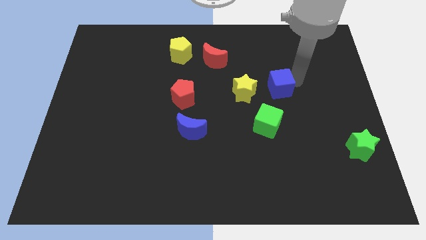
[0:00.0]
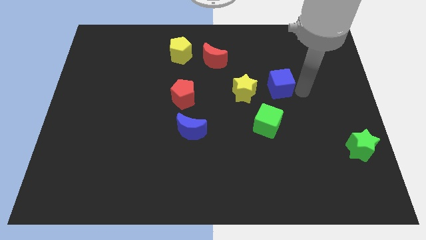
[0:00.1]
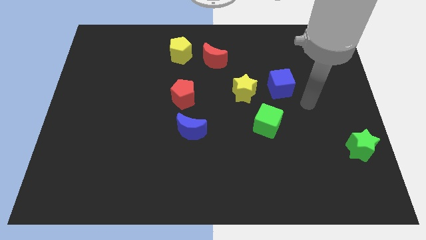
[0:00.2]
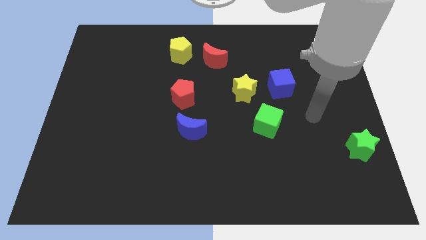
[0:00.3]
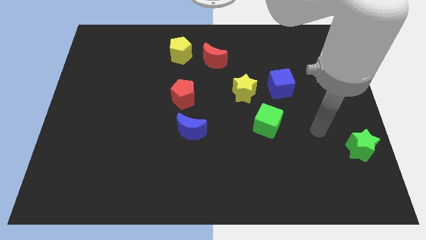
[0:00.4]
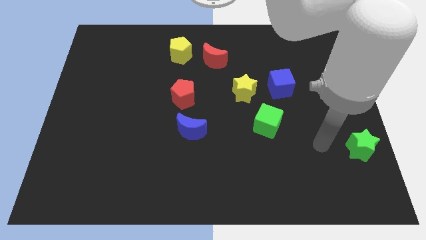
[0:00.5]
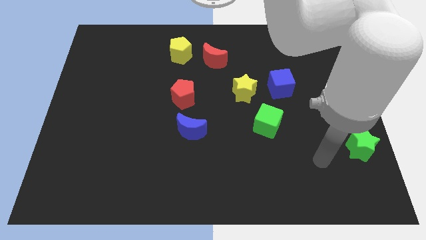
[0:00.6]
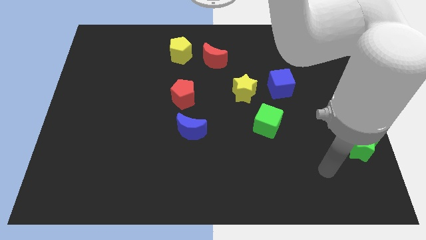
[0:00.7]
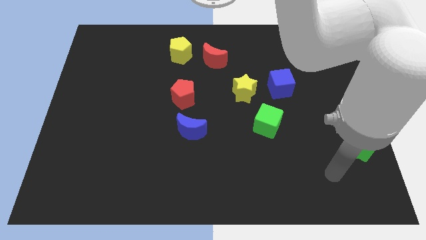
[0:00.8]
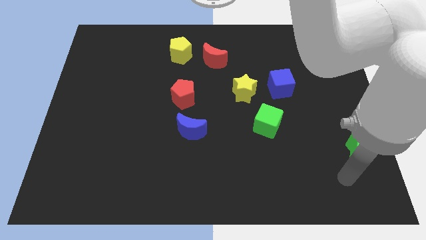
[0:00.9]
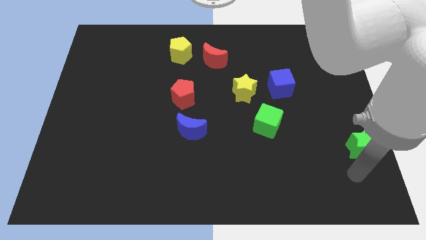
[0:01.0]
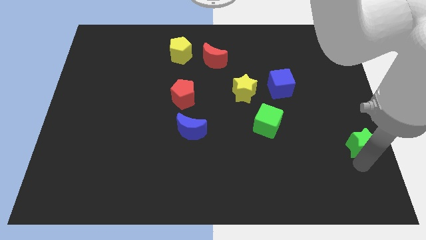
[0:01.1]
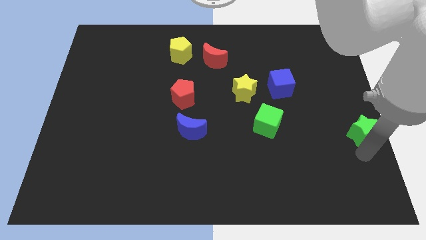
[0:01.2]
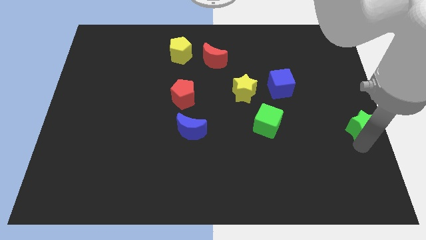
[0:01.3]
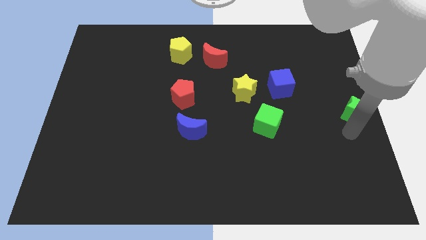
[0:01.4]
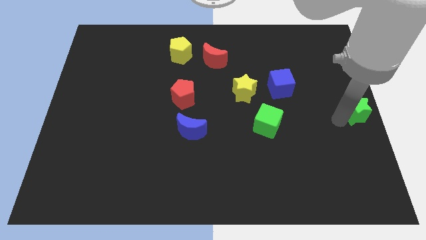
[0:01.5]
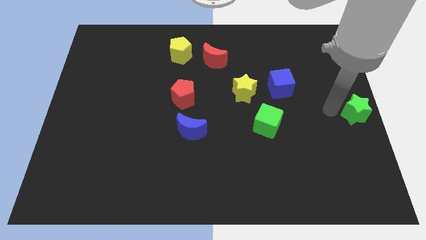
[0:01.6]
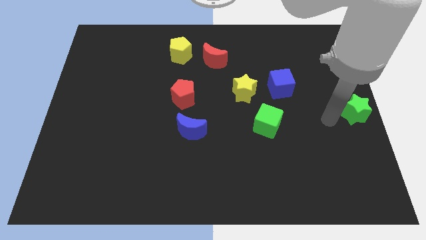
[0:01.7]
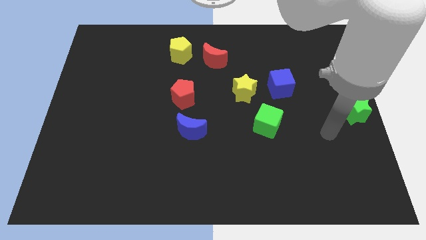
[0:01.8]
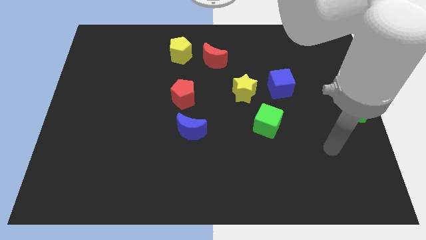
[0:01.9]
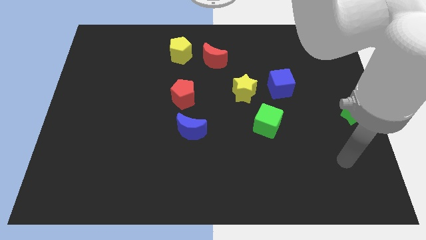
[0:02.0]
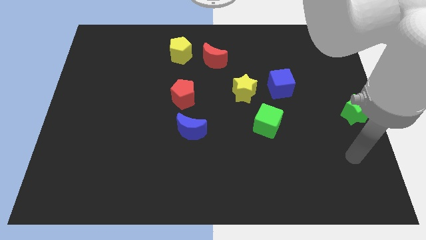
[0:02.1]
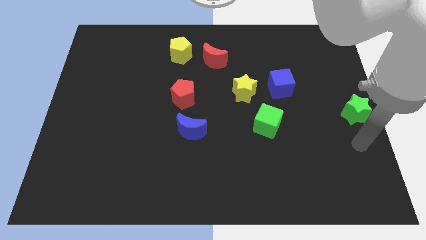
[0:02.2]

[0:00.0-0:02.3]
move the green star to the center right

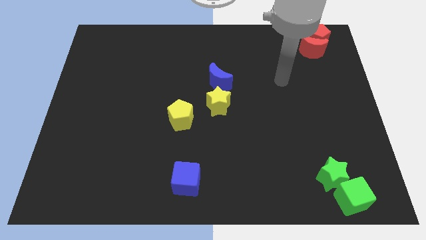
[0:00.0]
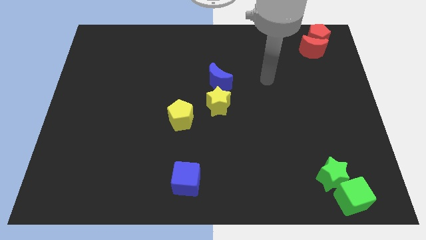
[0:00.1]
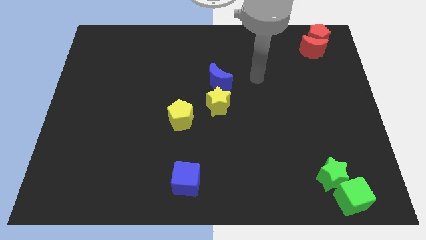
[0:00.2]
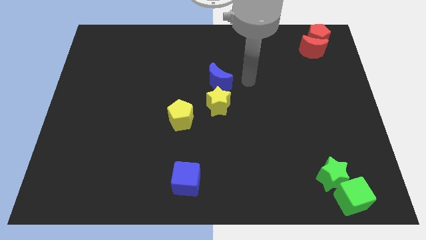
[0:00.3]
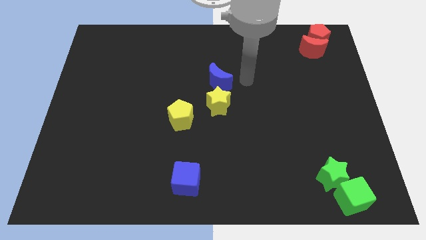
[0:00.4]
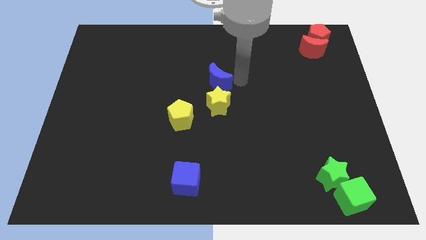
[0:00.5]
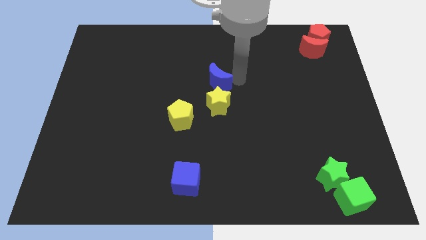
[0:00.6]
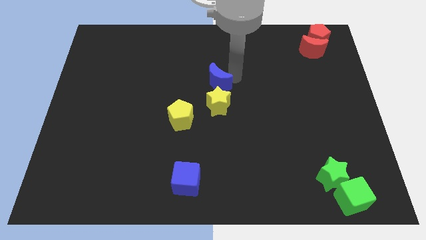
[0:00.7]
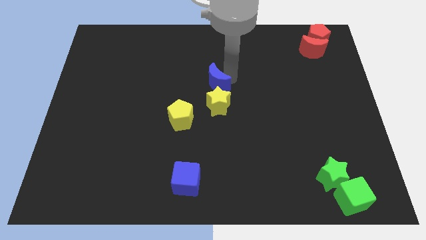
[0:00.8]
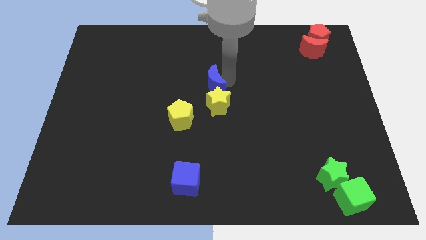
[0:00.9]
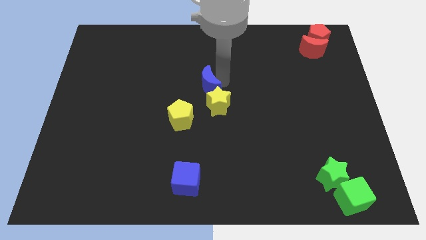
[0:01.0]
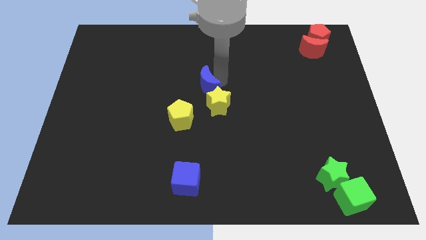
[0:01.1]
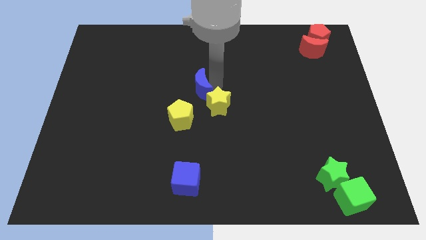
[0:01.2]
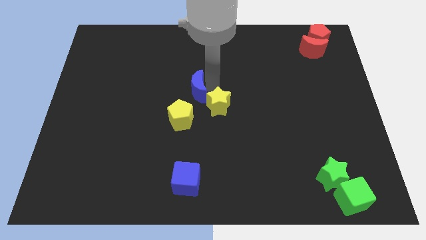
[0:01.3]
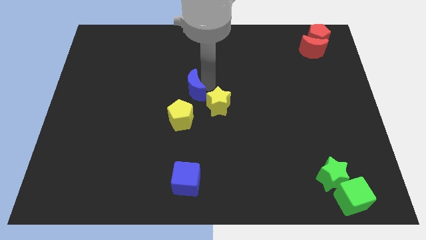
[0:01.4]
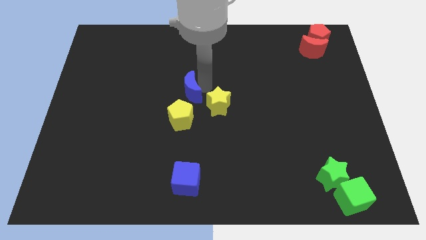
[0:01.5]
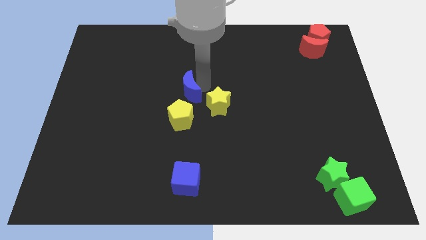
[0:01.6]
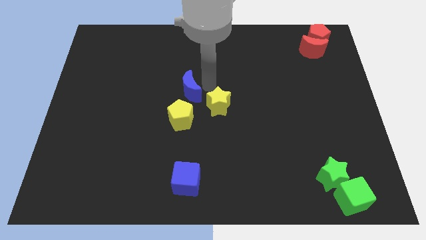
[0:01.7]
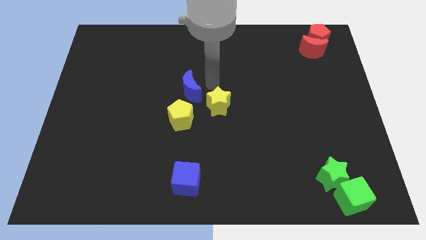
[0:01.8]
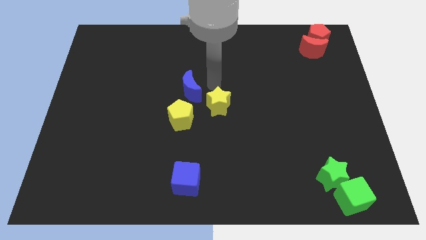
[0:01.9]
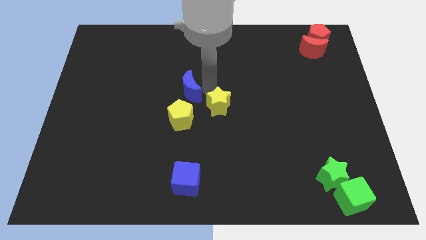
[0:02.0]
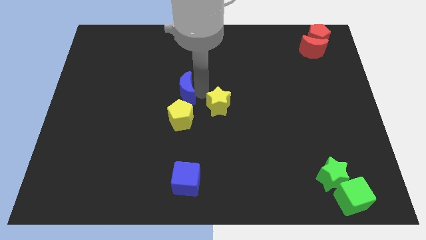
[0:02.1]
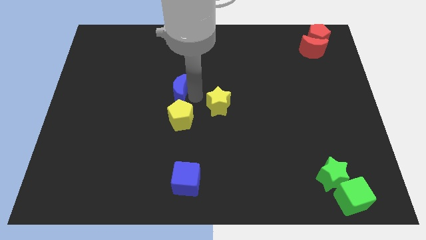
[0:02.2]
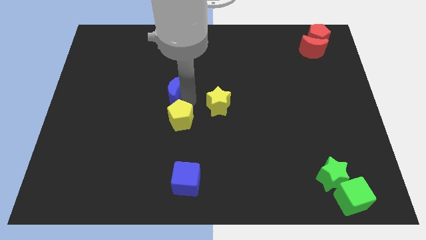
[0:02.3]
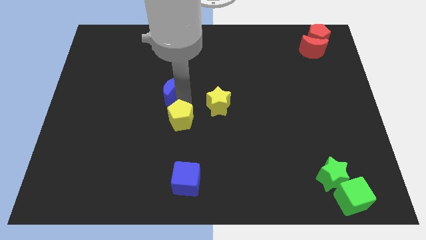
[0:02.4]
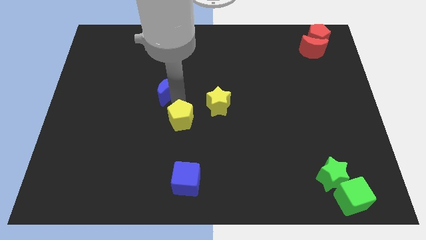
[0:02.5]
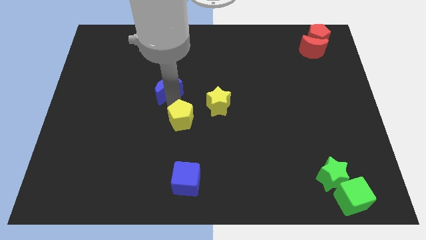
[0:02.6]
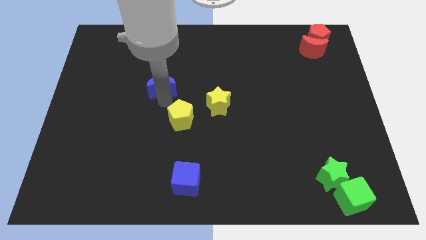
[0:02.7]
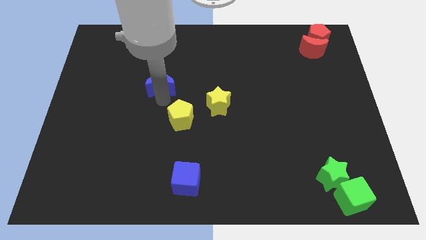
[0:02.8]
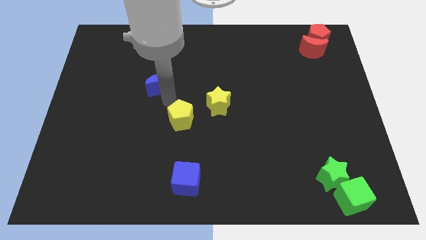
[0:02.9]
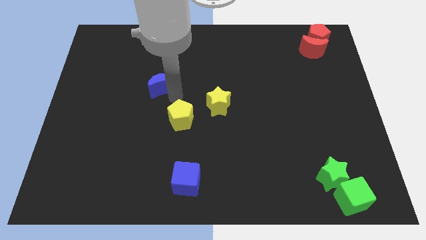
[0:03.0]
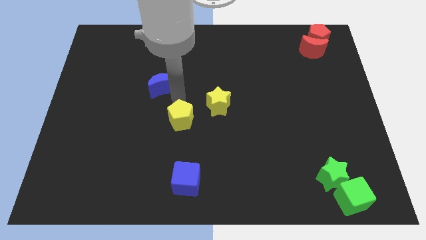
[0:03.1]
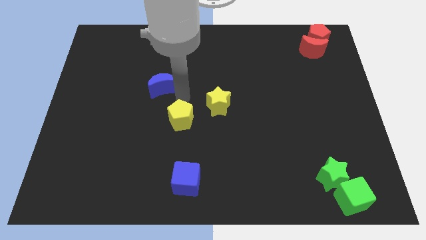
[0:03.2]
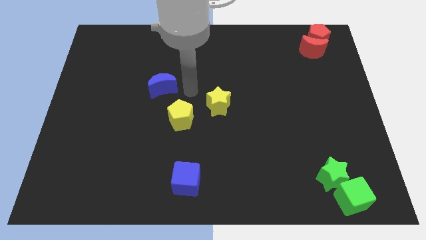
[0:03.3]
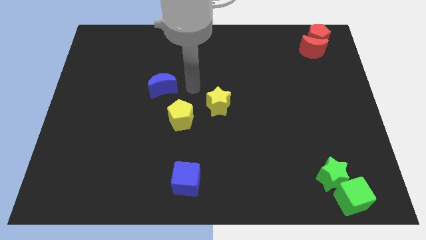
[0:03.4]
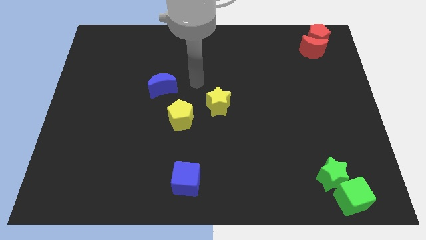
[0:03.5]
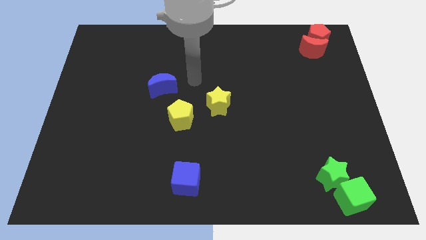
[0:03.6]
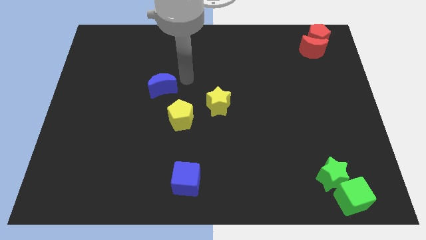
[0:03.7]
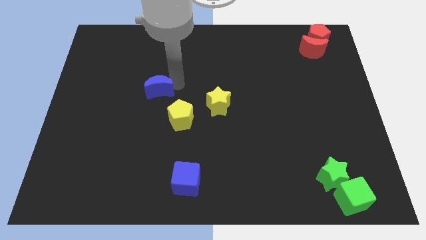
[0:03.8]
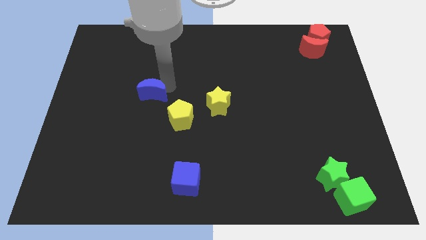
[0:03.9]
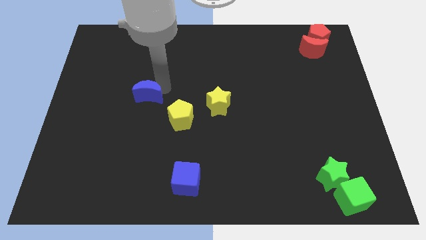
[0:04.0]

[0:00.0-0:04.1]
move the blue crescent to left side of the yellow pentagon

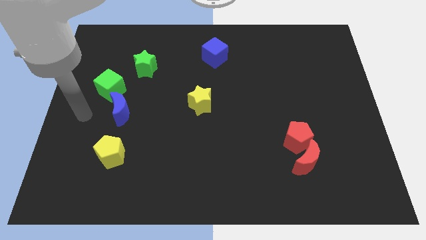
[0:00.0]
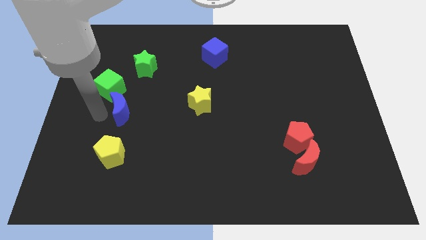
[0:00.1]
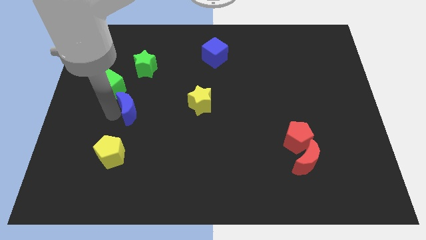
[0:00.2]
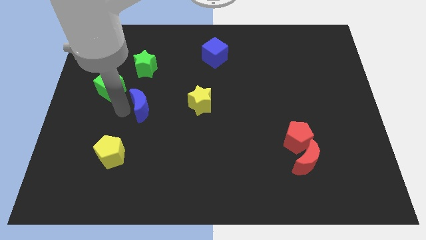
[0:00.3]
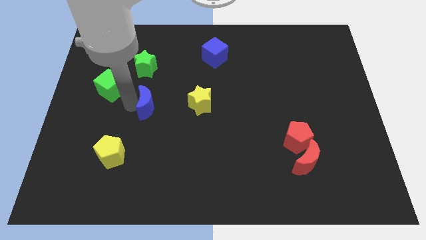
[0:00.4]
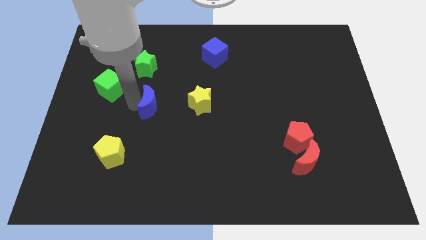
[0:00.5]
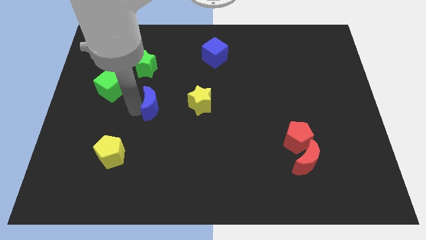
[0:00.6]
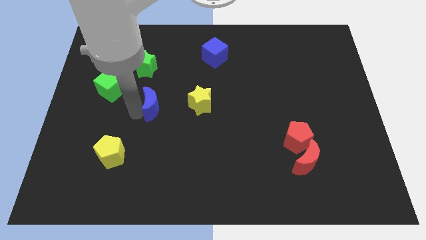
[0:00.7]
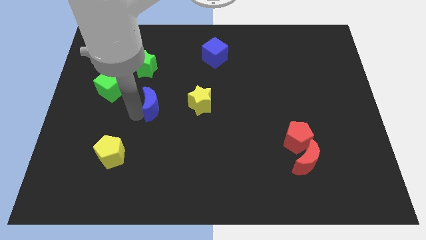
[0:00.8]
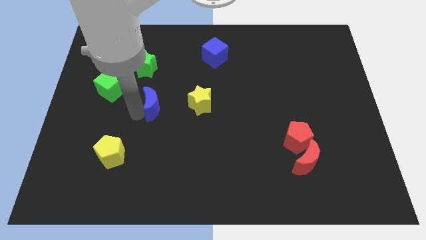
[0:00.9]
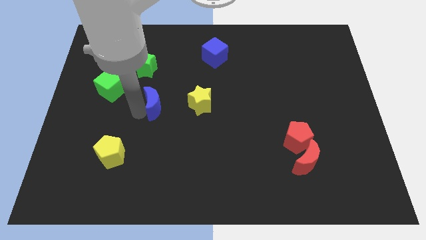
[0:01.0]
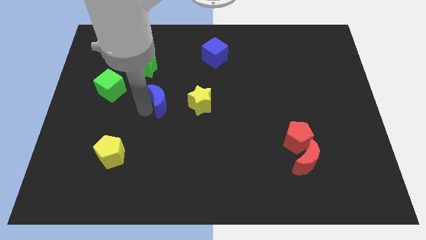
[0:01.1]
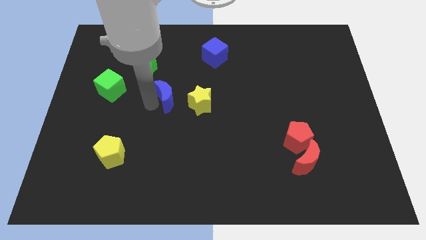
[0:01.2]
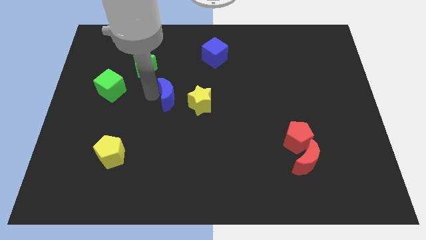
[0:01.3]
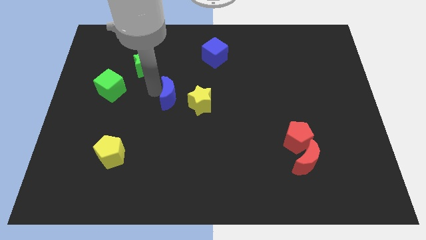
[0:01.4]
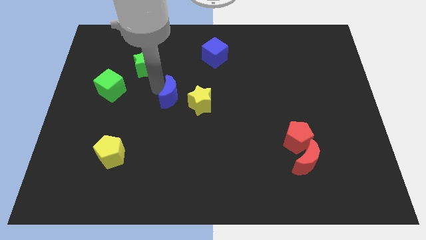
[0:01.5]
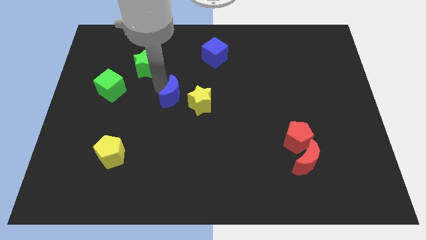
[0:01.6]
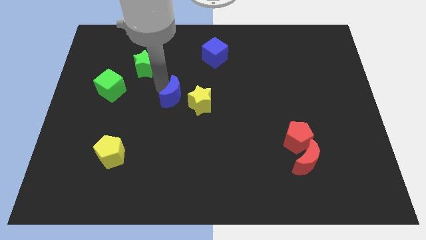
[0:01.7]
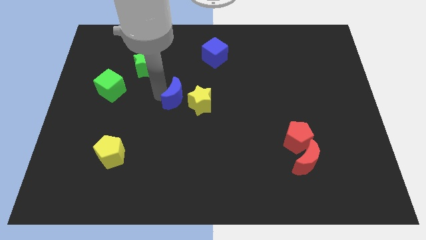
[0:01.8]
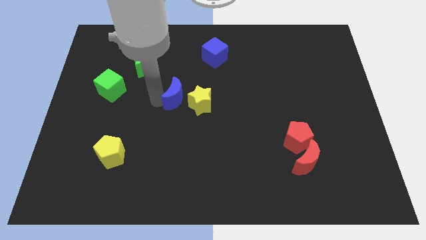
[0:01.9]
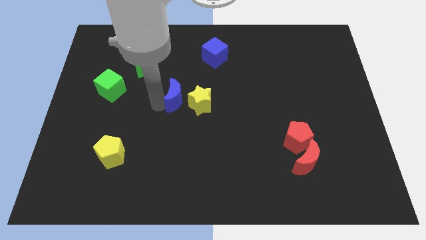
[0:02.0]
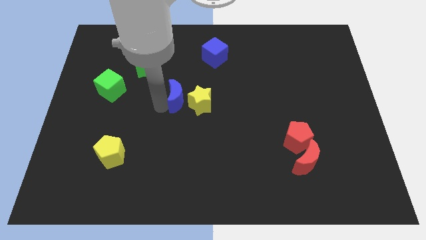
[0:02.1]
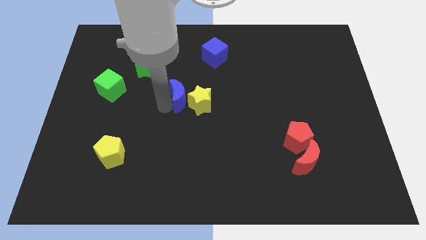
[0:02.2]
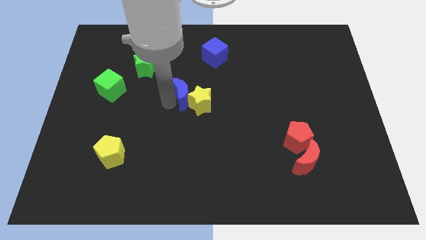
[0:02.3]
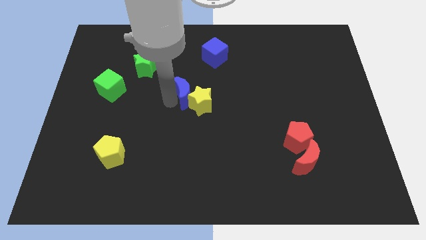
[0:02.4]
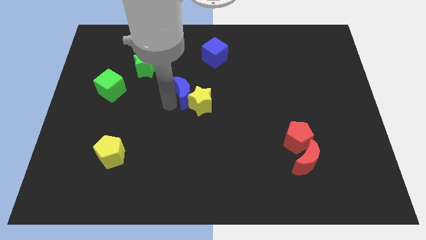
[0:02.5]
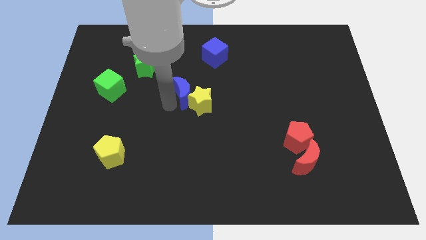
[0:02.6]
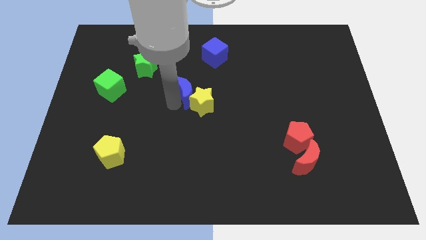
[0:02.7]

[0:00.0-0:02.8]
place the blue moon to the left side of the yellow star

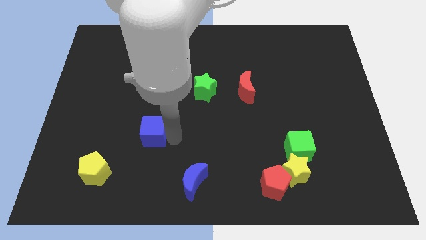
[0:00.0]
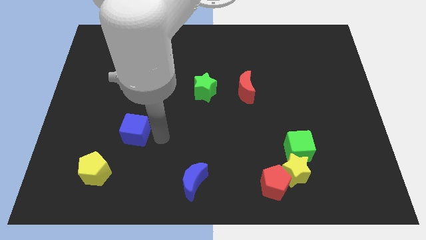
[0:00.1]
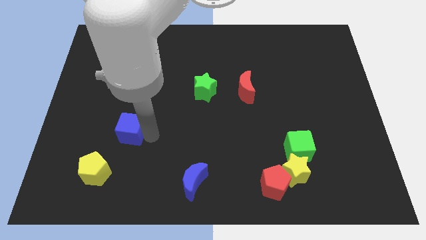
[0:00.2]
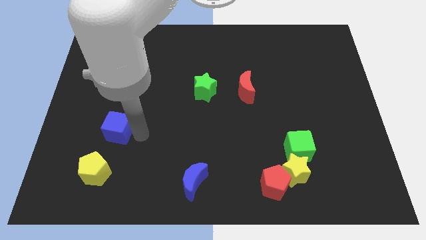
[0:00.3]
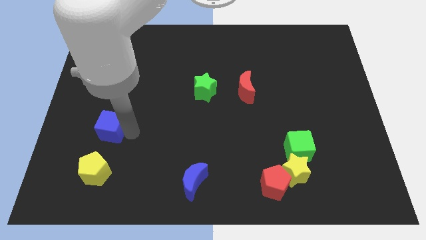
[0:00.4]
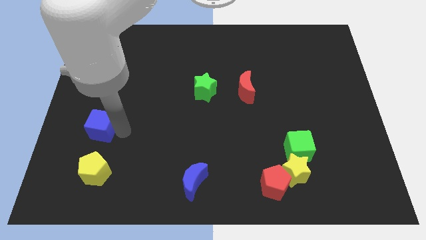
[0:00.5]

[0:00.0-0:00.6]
place blue cube above yellow pentagon
